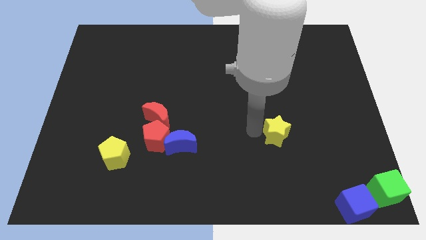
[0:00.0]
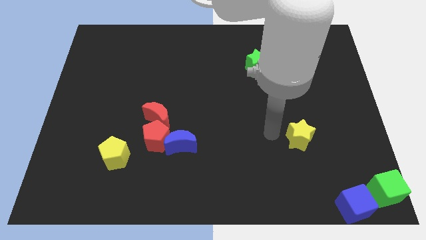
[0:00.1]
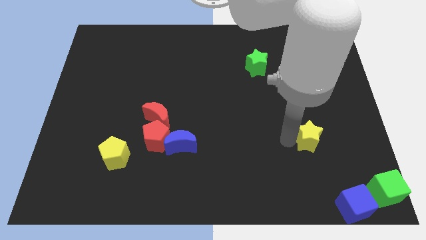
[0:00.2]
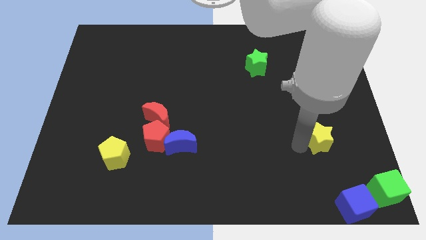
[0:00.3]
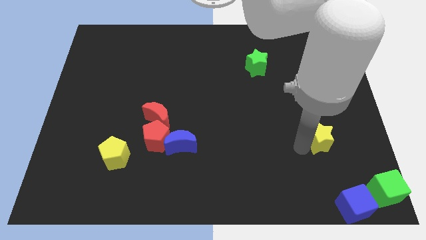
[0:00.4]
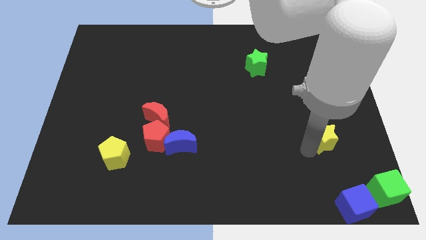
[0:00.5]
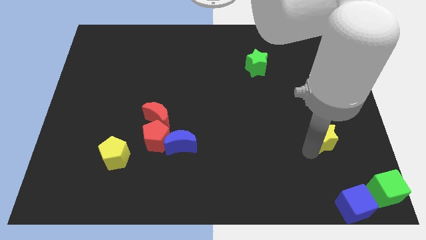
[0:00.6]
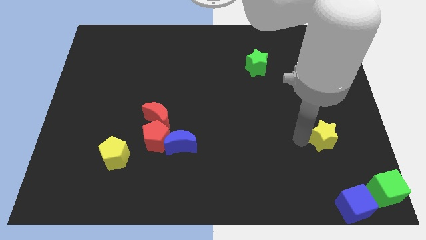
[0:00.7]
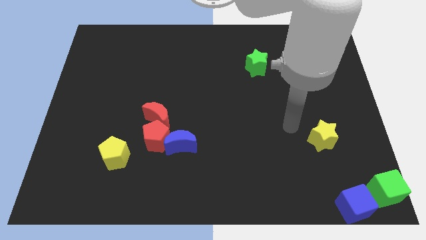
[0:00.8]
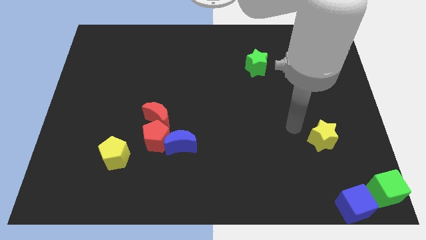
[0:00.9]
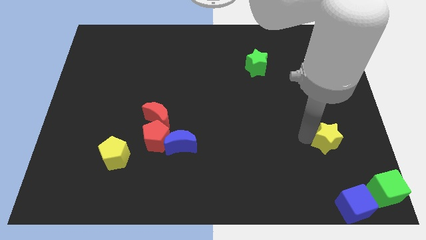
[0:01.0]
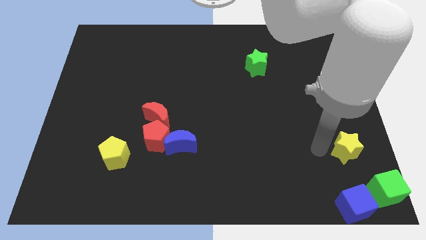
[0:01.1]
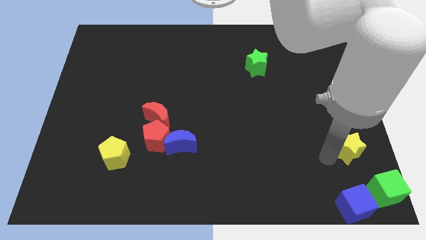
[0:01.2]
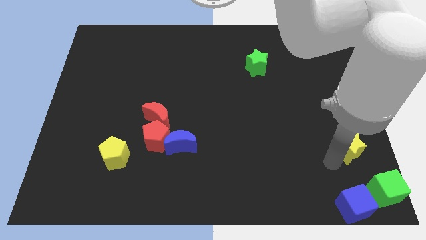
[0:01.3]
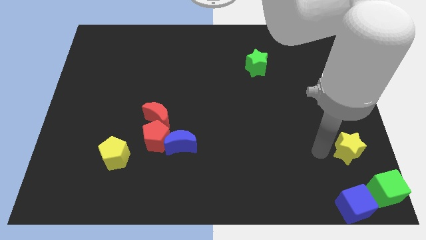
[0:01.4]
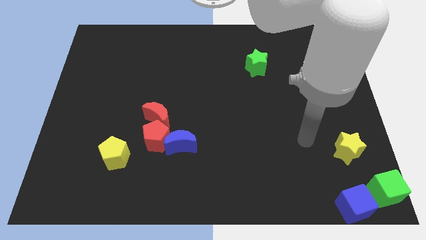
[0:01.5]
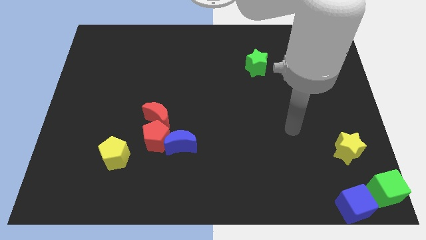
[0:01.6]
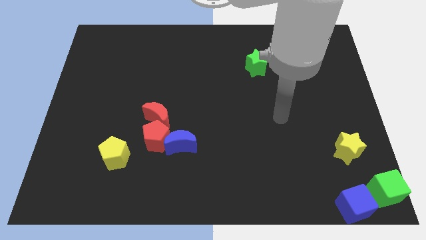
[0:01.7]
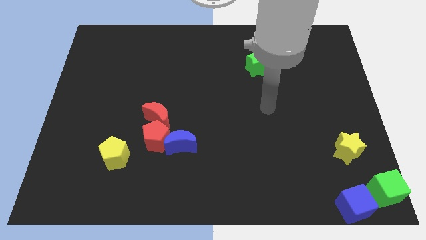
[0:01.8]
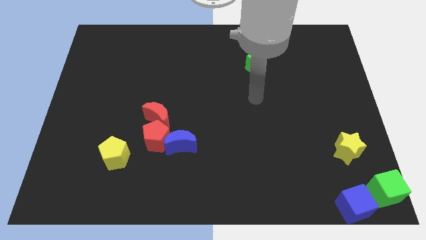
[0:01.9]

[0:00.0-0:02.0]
move the yellow star above the blue cube

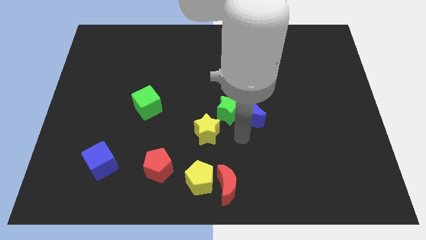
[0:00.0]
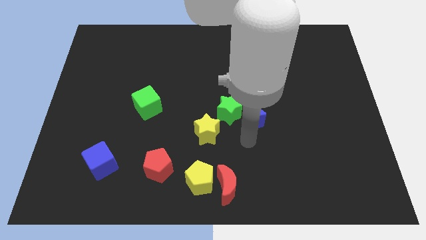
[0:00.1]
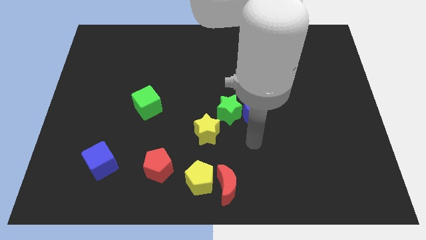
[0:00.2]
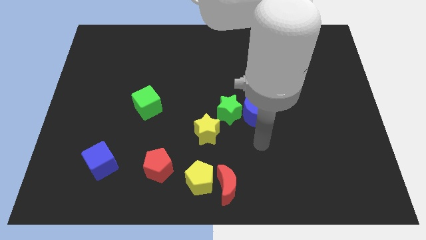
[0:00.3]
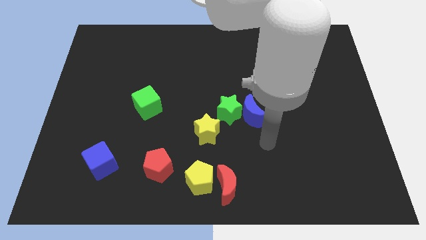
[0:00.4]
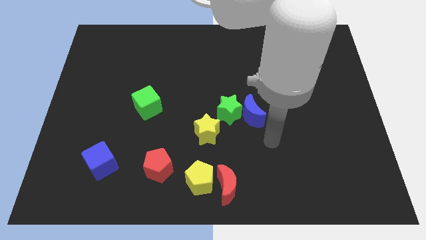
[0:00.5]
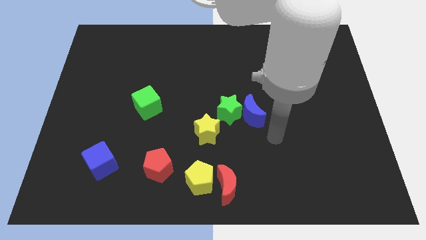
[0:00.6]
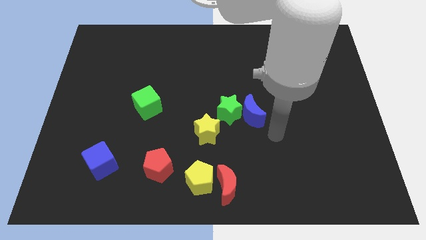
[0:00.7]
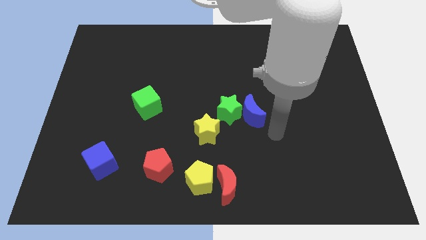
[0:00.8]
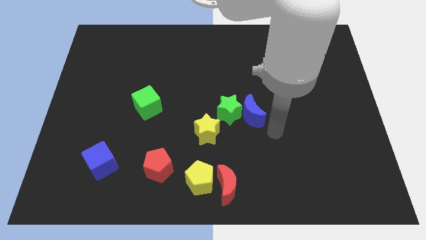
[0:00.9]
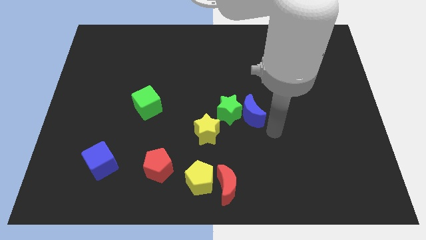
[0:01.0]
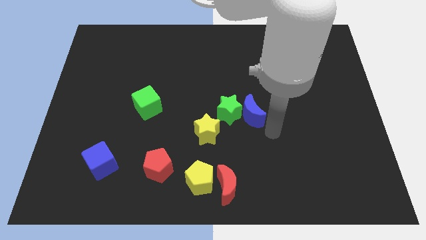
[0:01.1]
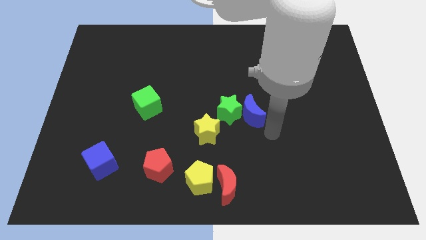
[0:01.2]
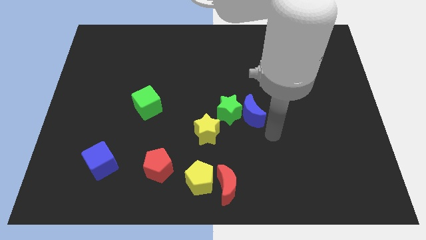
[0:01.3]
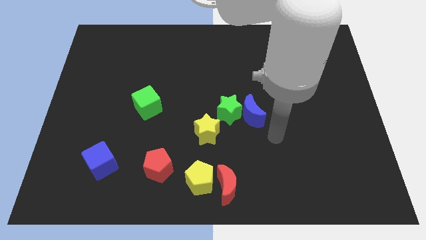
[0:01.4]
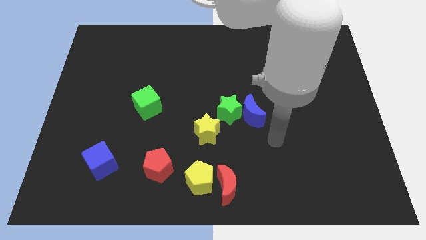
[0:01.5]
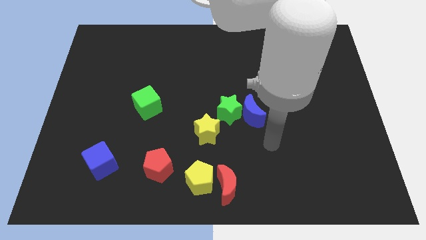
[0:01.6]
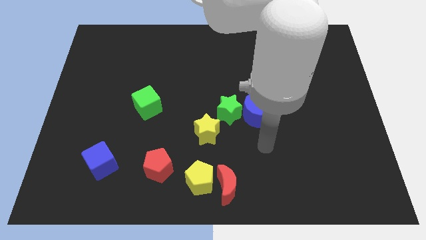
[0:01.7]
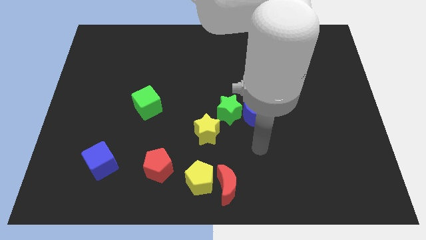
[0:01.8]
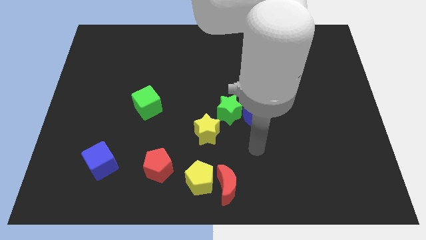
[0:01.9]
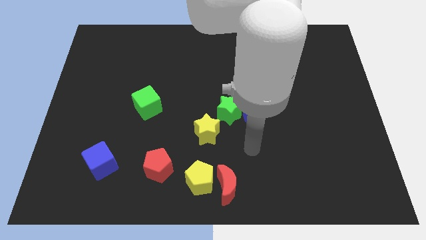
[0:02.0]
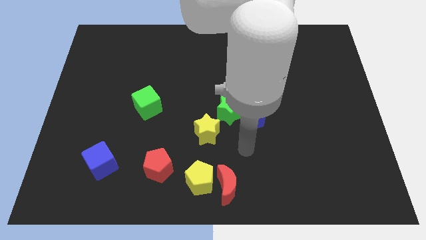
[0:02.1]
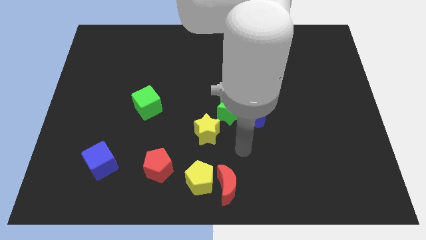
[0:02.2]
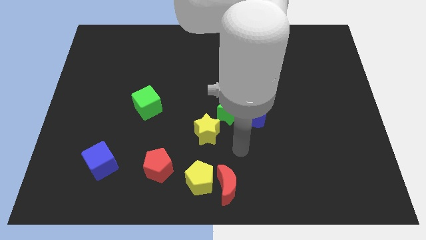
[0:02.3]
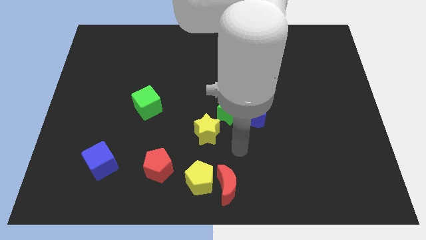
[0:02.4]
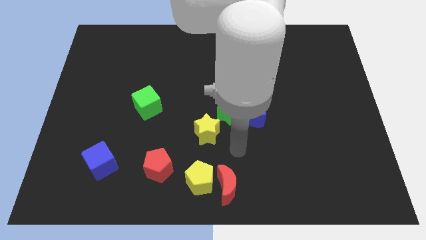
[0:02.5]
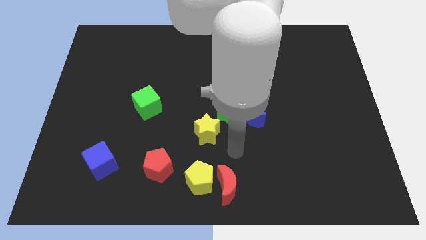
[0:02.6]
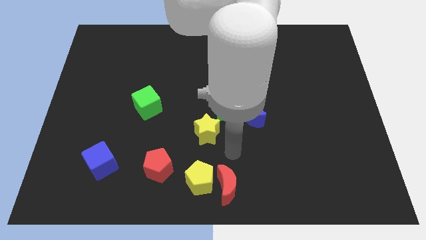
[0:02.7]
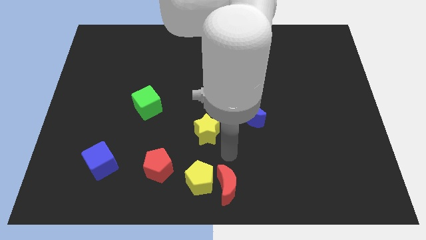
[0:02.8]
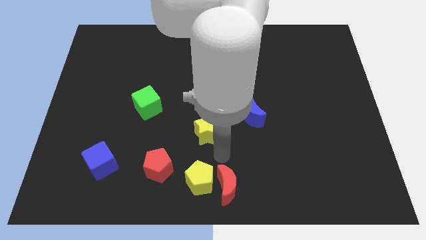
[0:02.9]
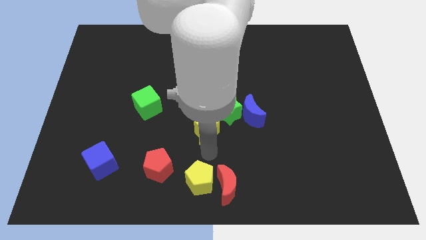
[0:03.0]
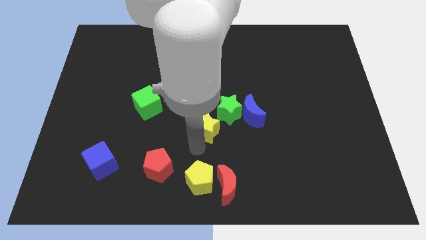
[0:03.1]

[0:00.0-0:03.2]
move your arm in between the yellow star and the yellow pentagon

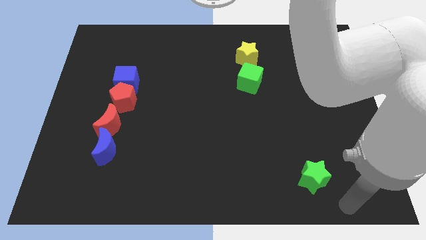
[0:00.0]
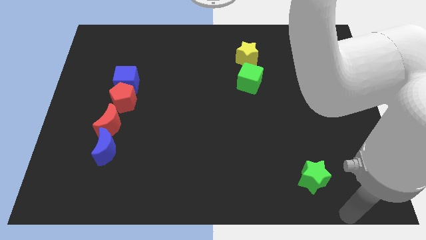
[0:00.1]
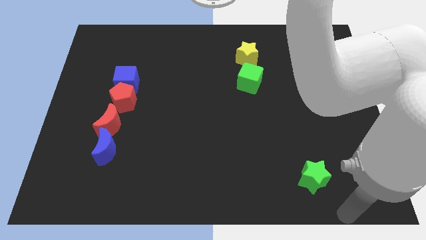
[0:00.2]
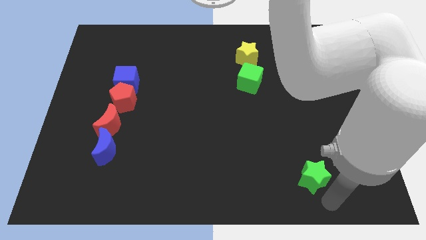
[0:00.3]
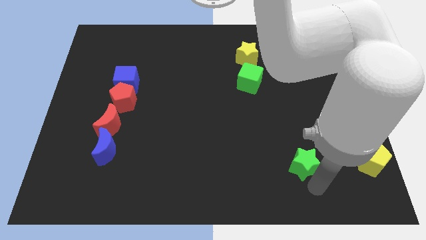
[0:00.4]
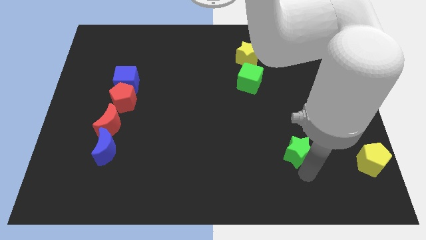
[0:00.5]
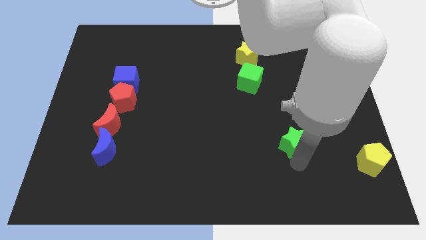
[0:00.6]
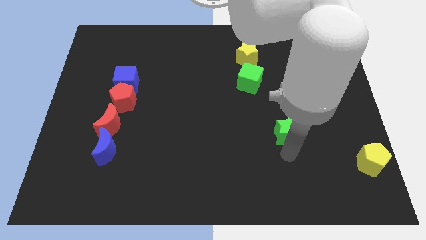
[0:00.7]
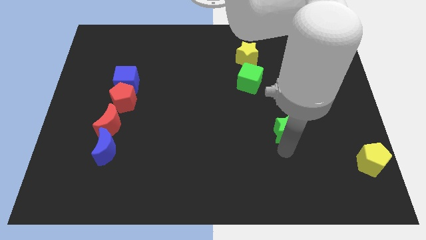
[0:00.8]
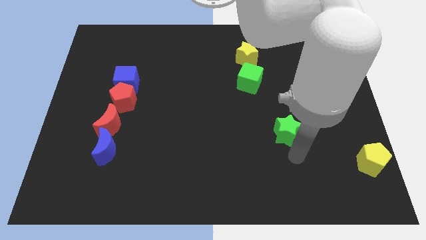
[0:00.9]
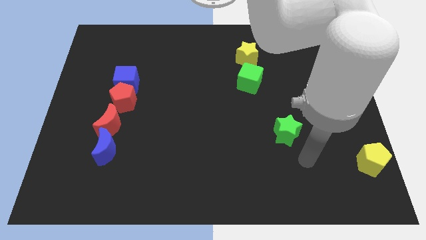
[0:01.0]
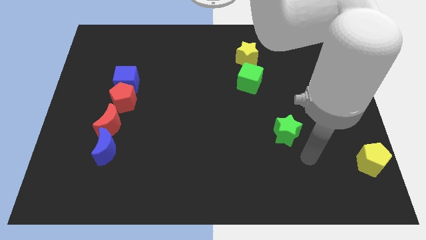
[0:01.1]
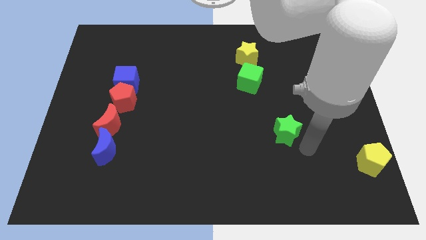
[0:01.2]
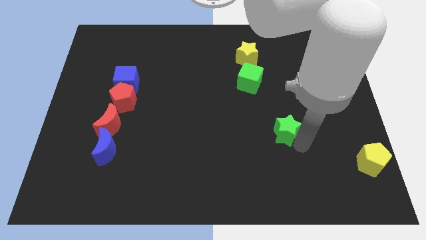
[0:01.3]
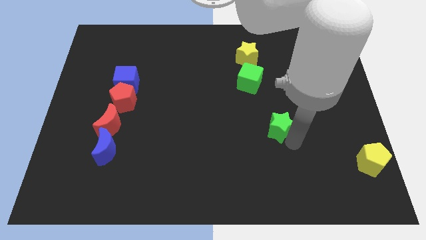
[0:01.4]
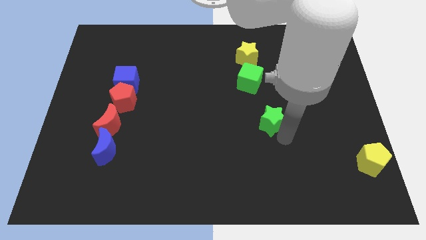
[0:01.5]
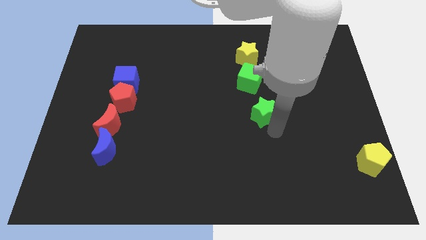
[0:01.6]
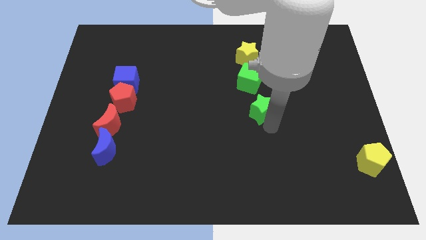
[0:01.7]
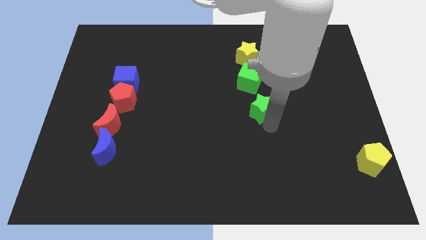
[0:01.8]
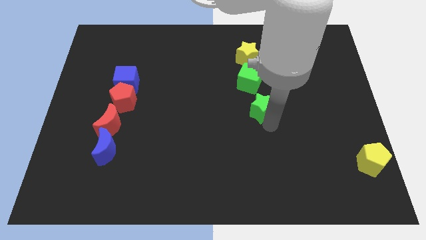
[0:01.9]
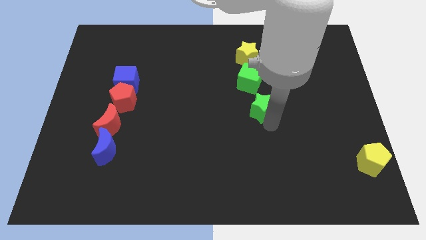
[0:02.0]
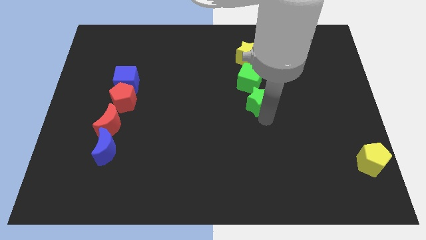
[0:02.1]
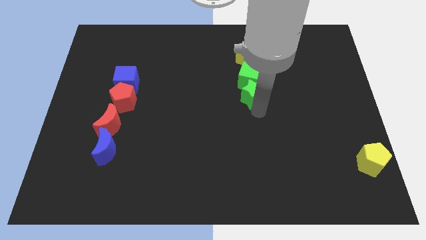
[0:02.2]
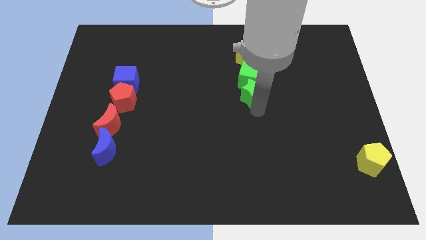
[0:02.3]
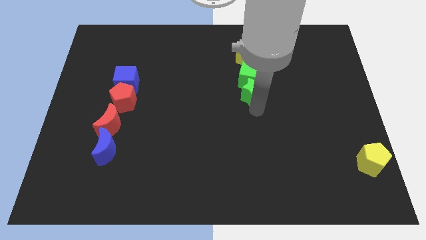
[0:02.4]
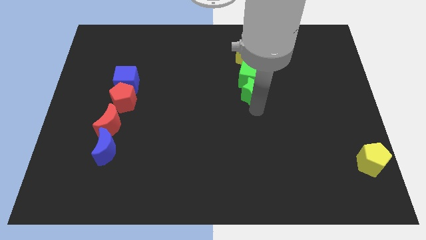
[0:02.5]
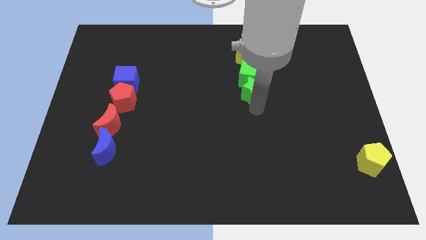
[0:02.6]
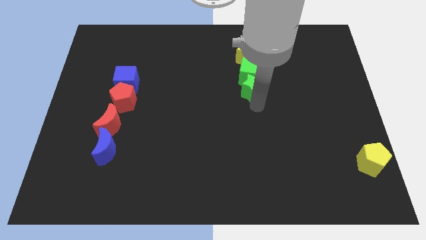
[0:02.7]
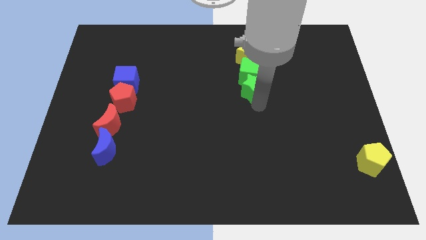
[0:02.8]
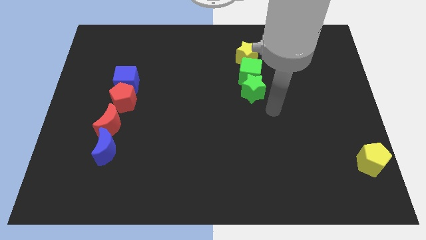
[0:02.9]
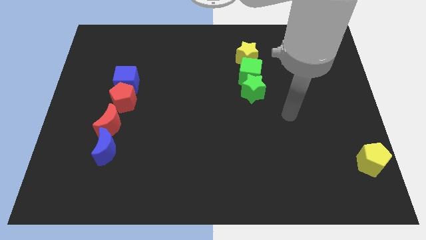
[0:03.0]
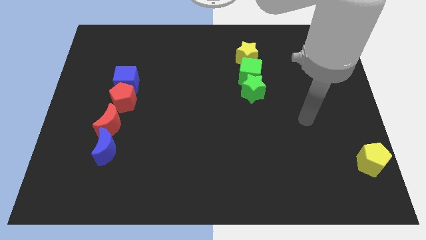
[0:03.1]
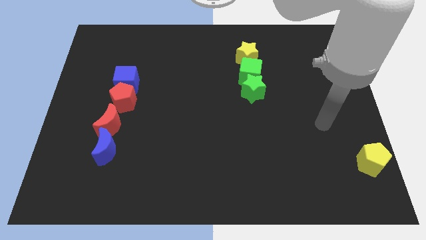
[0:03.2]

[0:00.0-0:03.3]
push the green star into the green cube

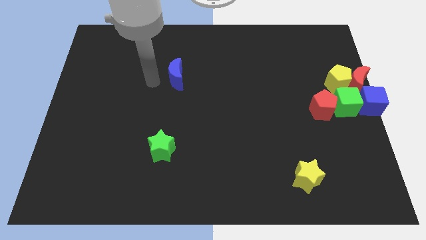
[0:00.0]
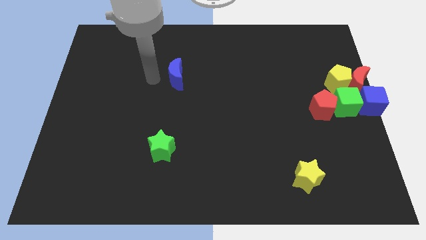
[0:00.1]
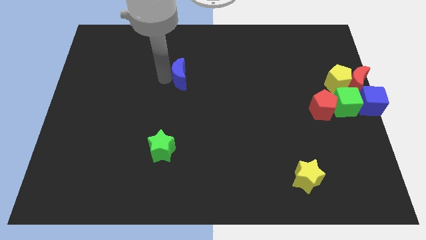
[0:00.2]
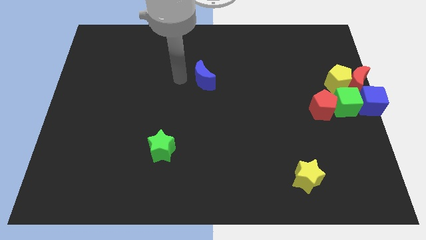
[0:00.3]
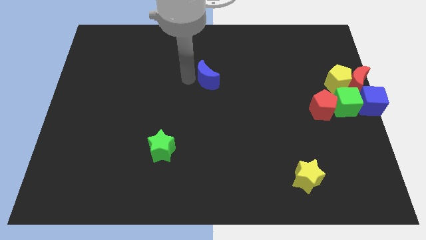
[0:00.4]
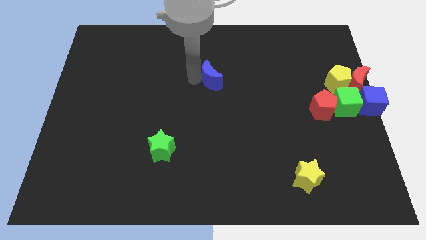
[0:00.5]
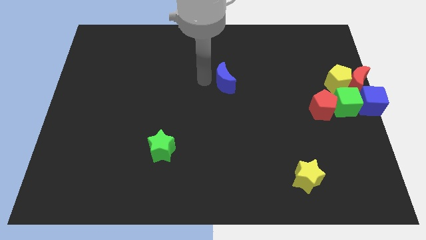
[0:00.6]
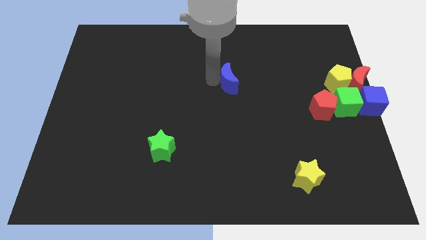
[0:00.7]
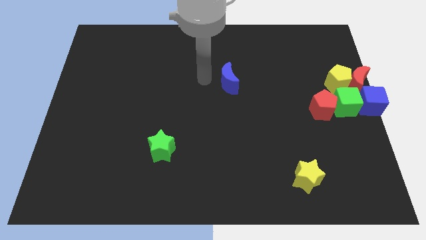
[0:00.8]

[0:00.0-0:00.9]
push blue moon slightly to the right
